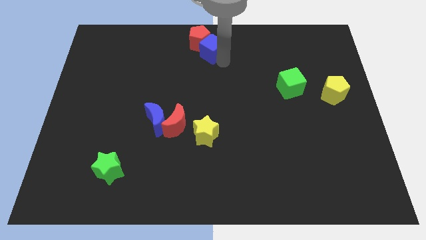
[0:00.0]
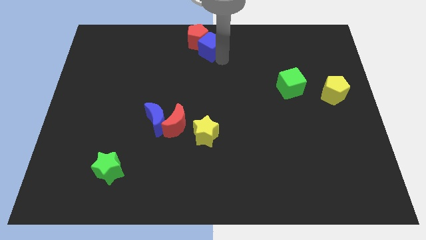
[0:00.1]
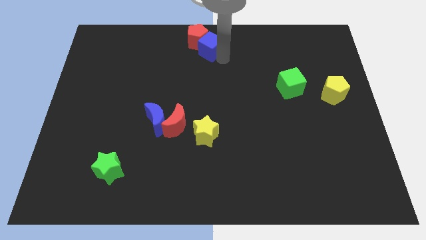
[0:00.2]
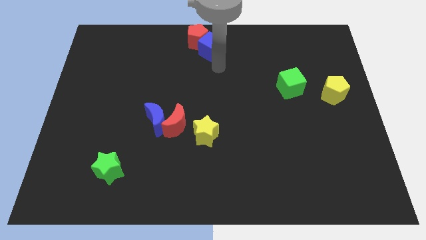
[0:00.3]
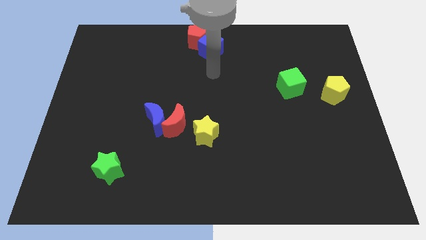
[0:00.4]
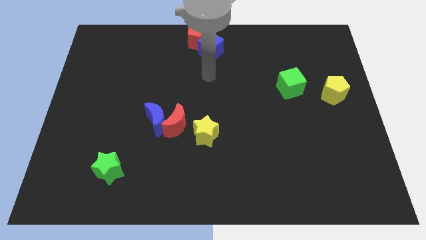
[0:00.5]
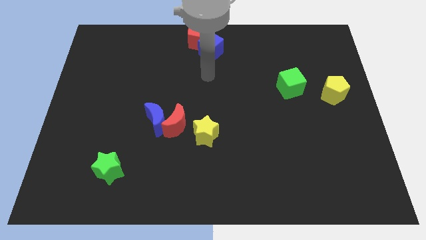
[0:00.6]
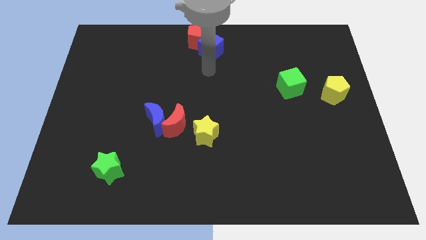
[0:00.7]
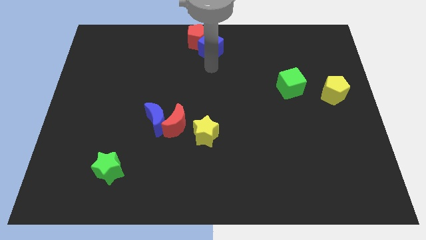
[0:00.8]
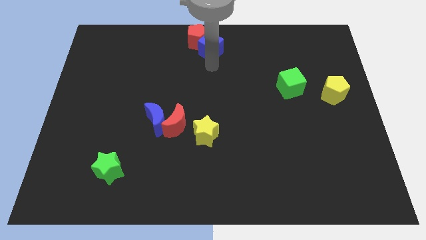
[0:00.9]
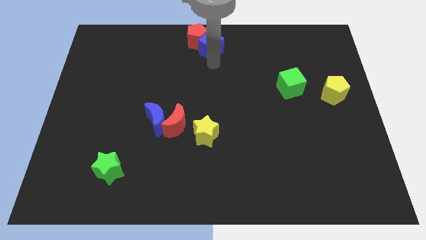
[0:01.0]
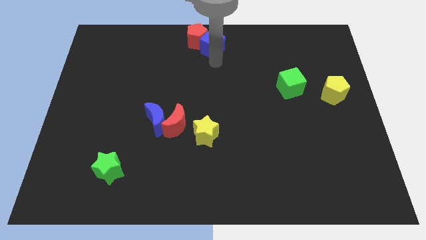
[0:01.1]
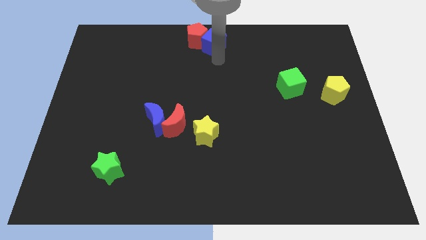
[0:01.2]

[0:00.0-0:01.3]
slightly move the blue cube to the top center

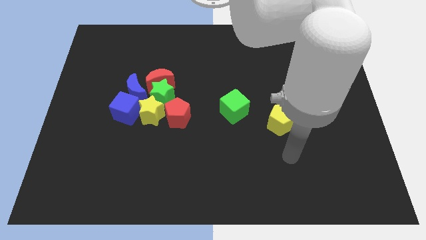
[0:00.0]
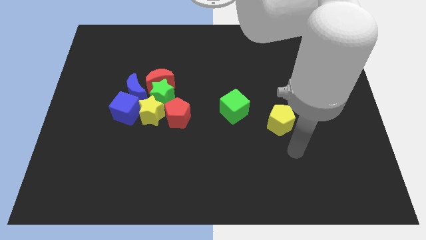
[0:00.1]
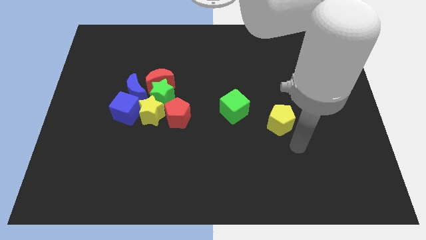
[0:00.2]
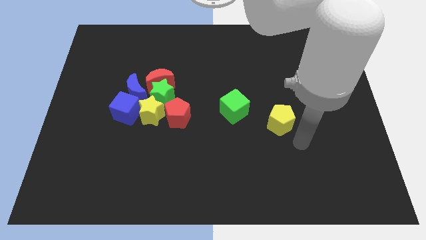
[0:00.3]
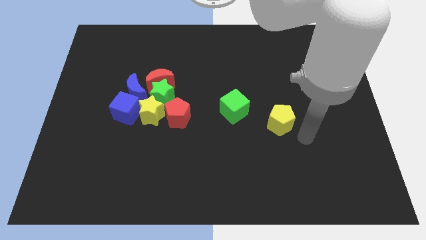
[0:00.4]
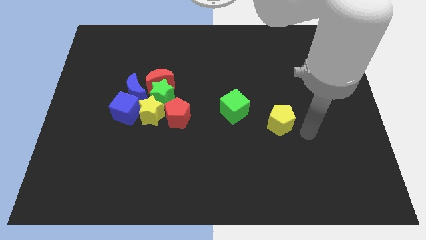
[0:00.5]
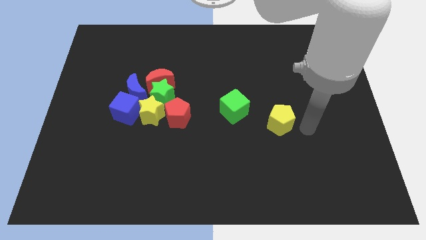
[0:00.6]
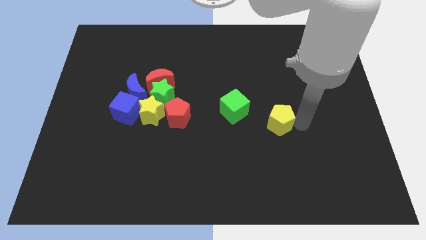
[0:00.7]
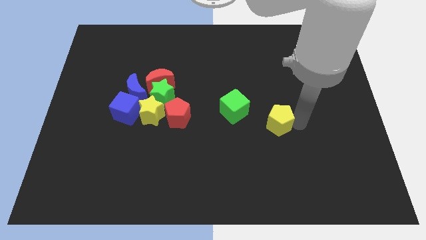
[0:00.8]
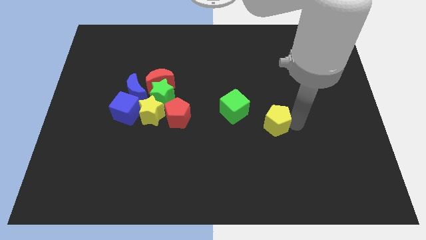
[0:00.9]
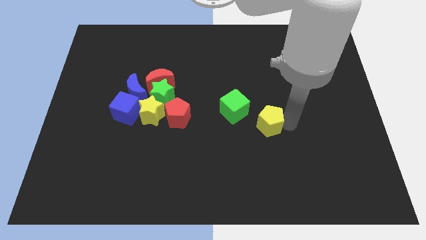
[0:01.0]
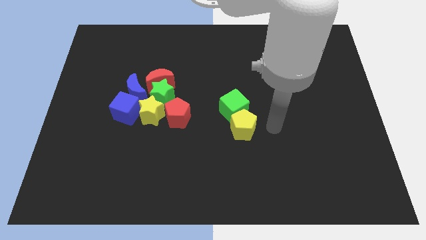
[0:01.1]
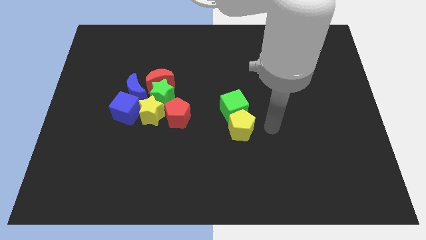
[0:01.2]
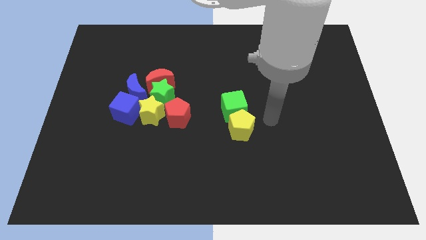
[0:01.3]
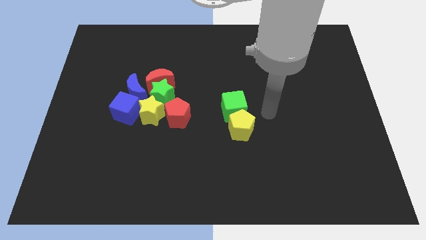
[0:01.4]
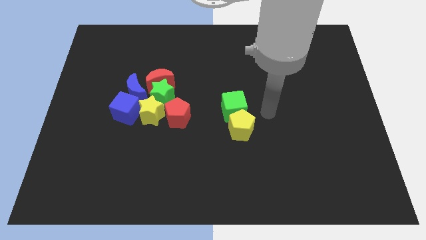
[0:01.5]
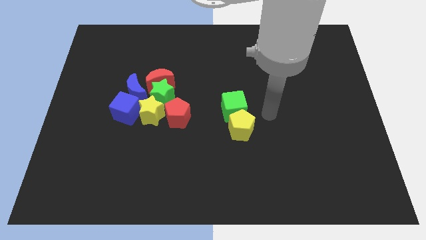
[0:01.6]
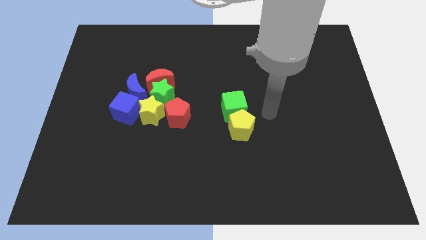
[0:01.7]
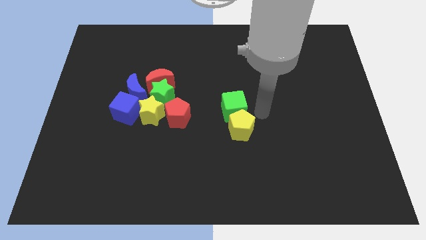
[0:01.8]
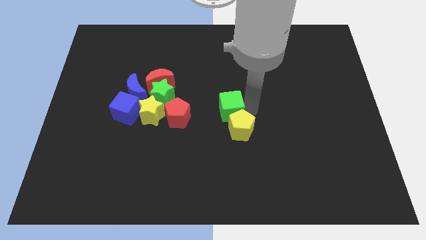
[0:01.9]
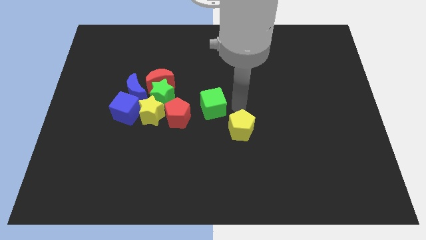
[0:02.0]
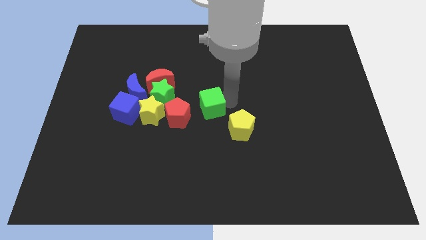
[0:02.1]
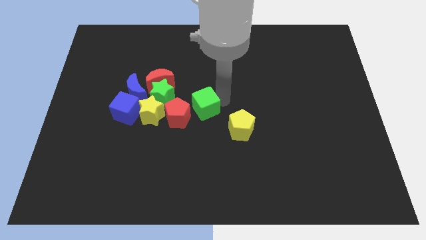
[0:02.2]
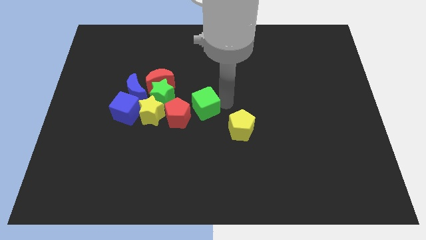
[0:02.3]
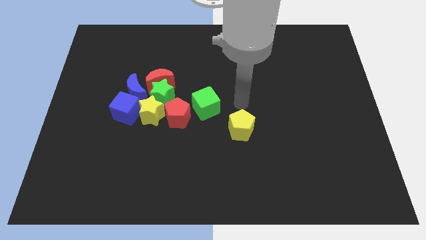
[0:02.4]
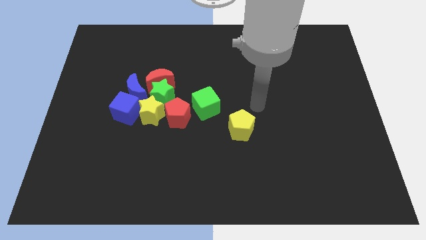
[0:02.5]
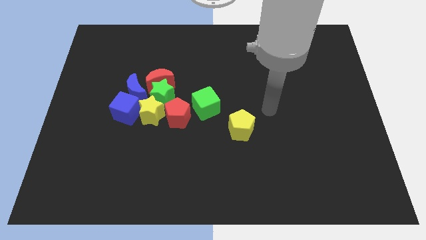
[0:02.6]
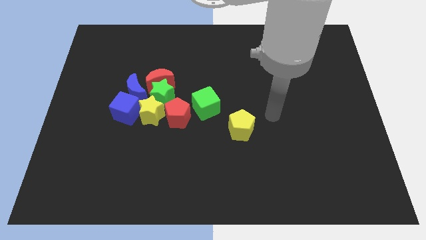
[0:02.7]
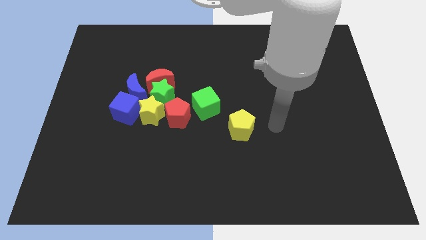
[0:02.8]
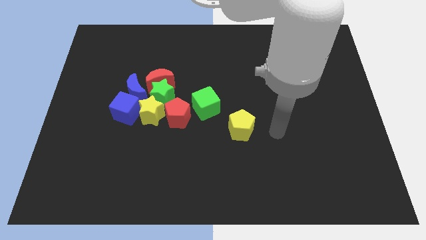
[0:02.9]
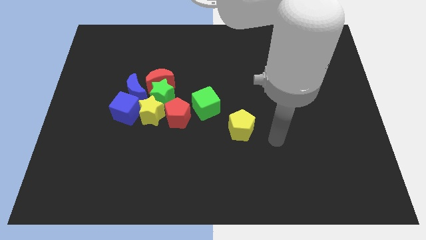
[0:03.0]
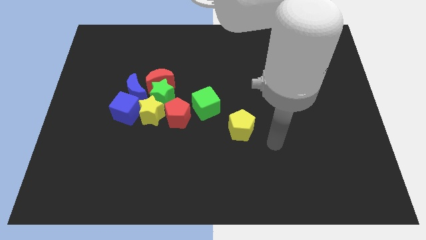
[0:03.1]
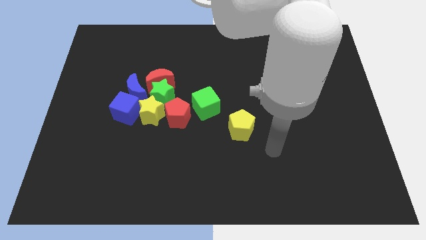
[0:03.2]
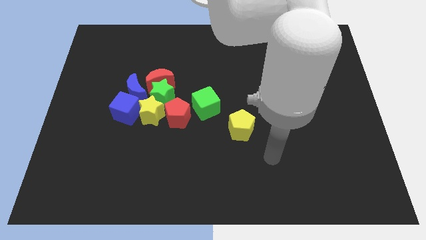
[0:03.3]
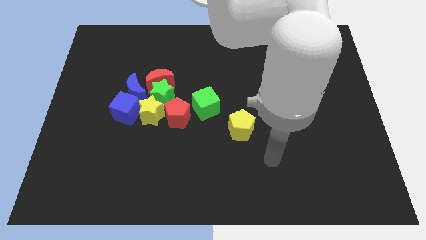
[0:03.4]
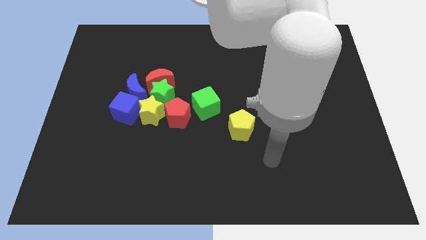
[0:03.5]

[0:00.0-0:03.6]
slide the green cube and yellow pentagon towards the group of blocks

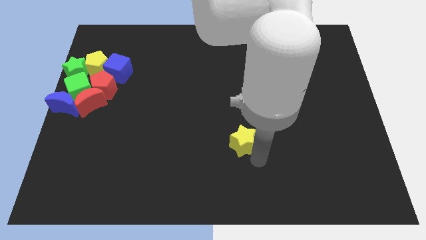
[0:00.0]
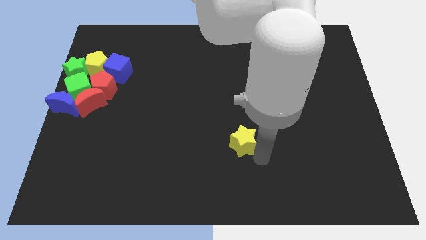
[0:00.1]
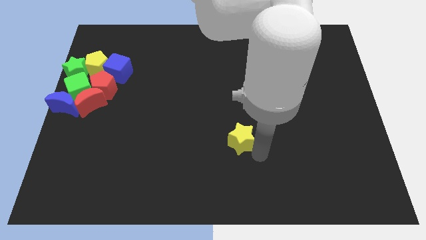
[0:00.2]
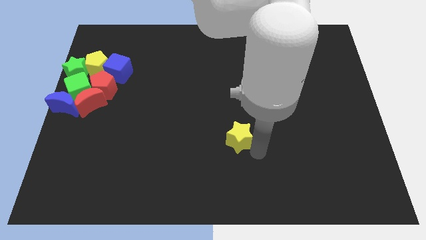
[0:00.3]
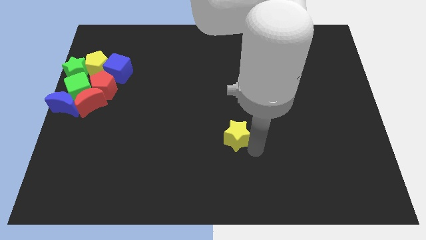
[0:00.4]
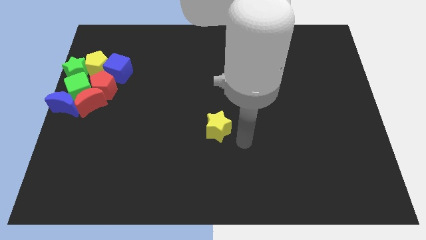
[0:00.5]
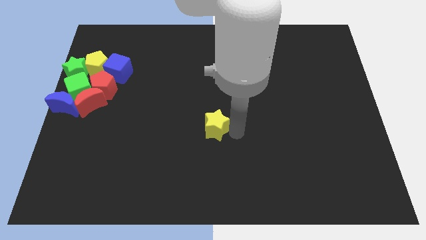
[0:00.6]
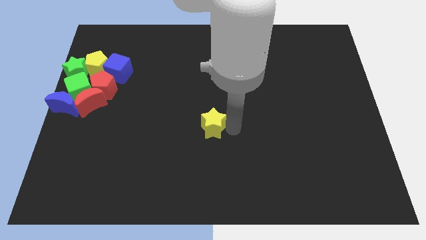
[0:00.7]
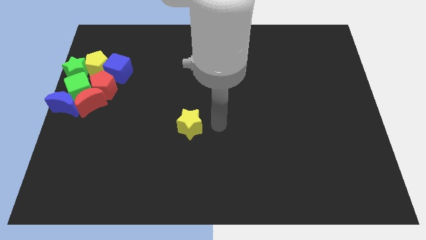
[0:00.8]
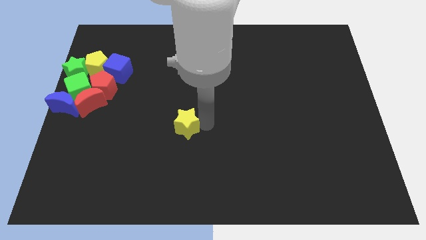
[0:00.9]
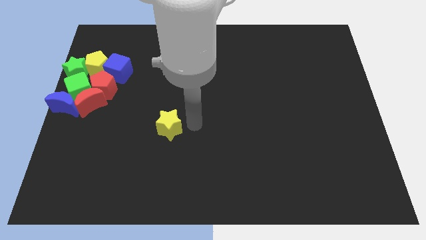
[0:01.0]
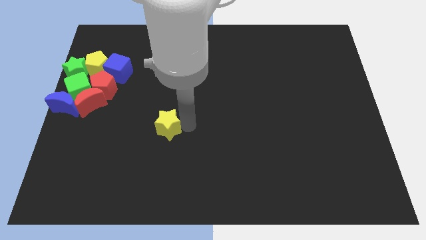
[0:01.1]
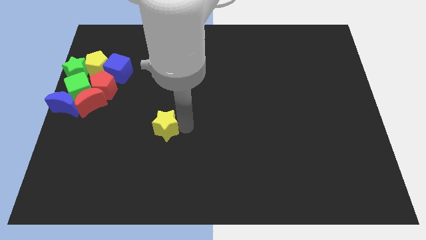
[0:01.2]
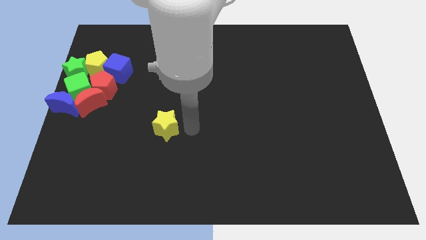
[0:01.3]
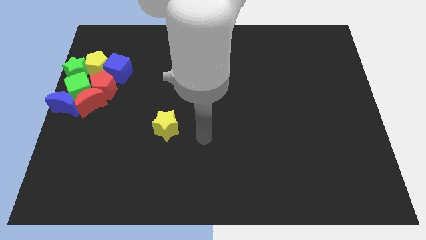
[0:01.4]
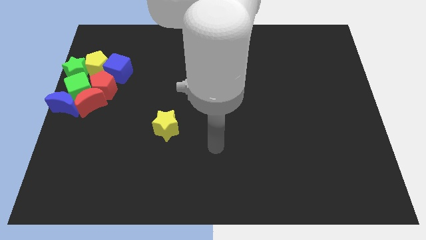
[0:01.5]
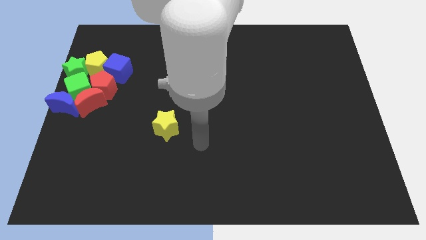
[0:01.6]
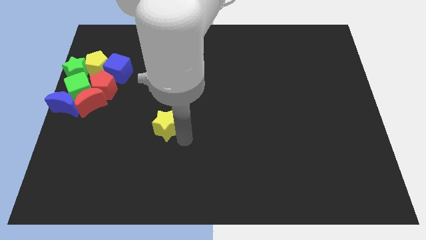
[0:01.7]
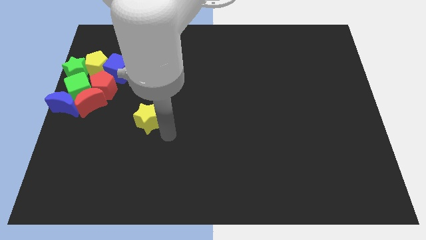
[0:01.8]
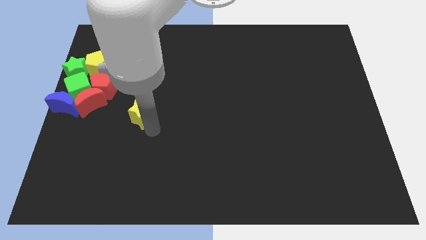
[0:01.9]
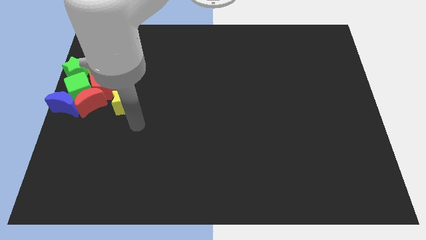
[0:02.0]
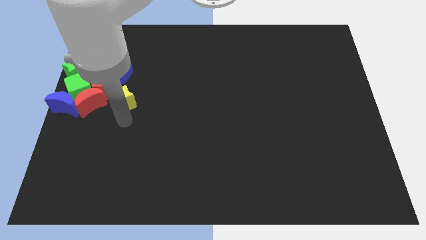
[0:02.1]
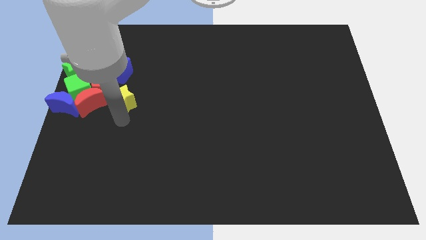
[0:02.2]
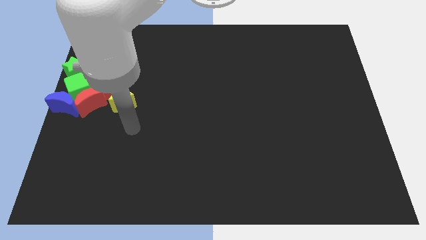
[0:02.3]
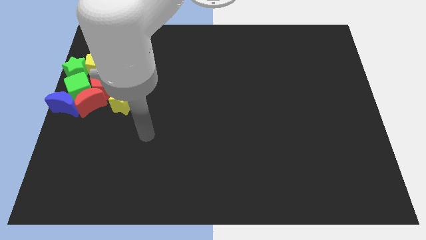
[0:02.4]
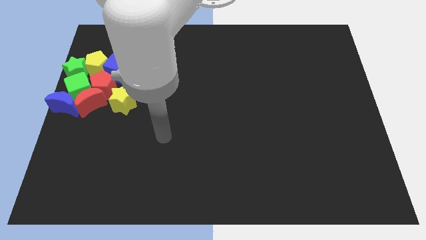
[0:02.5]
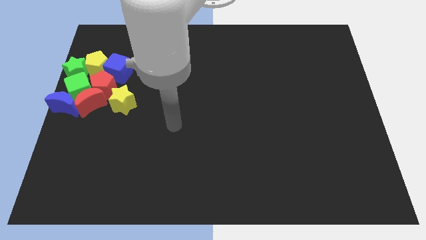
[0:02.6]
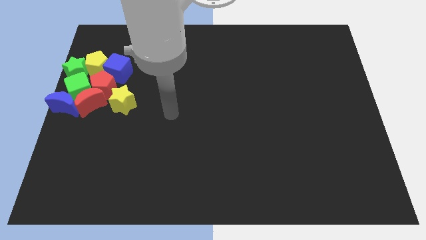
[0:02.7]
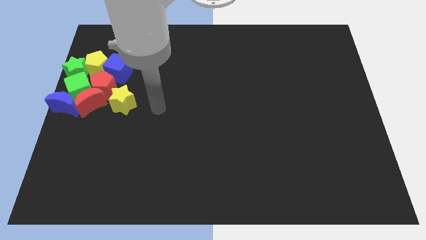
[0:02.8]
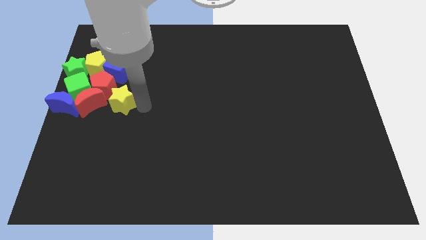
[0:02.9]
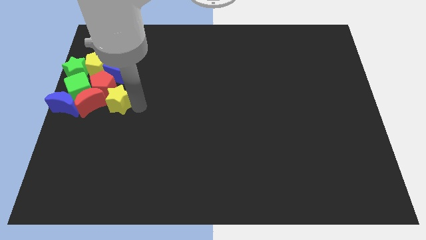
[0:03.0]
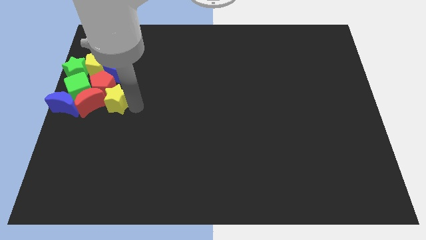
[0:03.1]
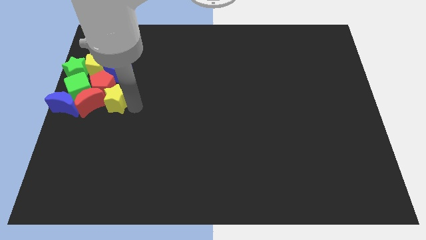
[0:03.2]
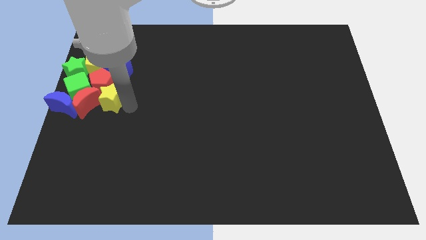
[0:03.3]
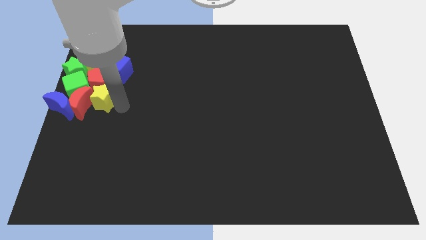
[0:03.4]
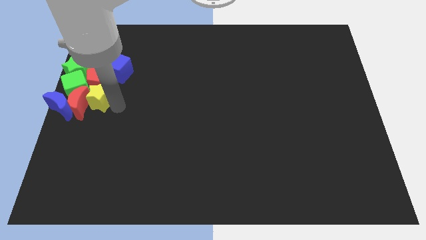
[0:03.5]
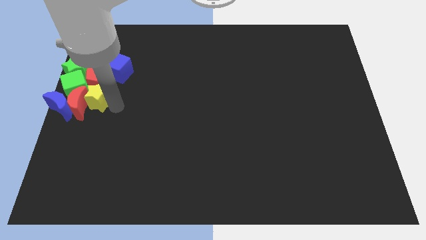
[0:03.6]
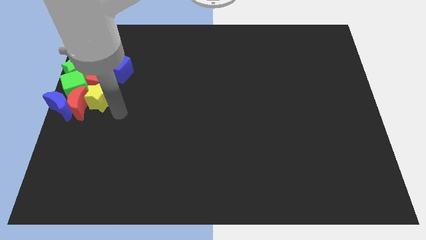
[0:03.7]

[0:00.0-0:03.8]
push the yellow star into the group of blocks

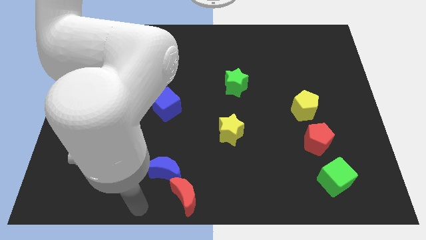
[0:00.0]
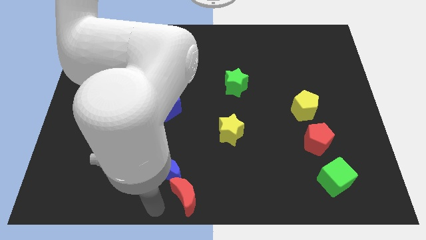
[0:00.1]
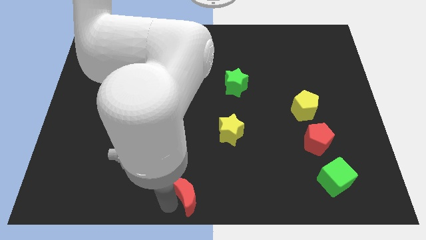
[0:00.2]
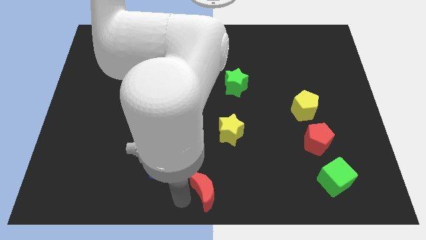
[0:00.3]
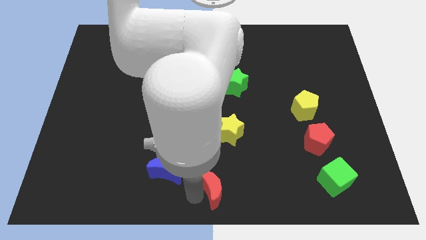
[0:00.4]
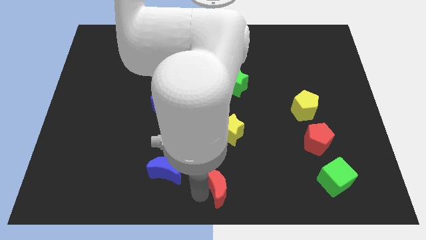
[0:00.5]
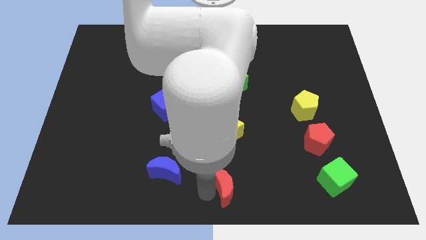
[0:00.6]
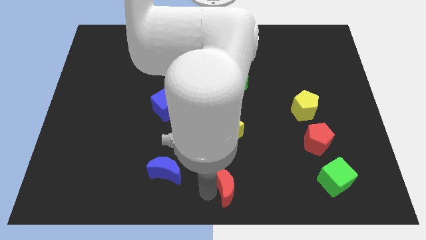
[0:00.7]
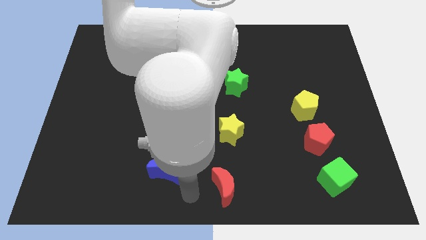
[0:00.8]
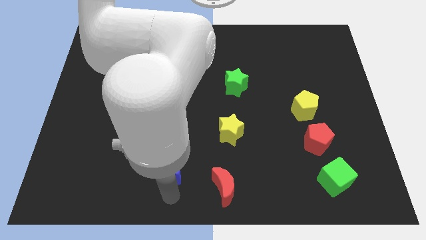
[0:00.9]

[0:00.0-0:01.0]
move the red moon to the vertical bottom side of the yellow star
